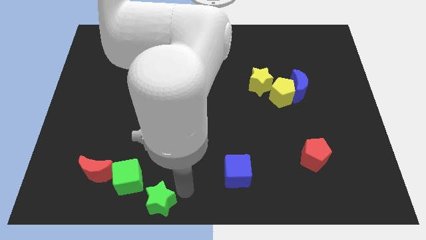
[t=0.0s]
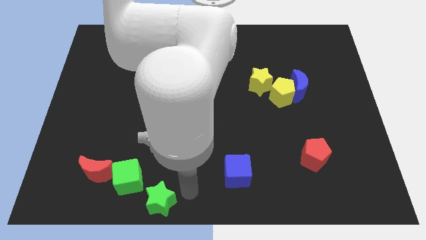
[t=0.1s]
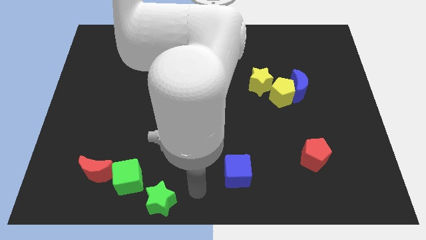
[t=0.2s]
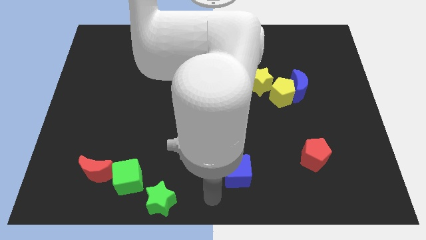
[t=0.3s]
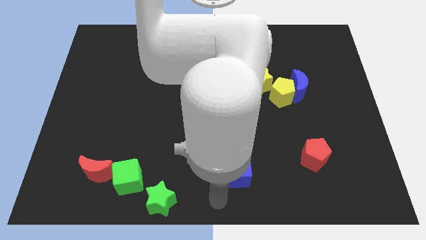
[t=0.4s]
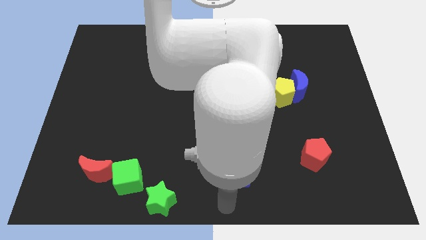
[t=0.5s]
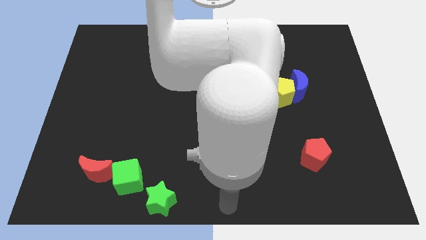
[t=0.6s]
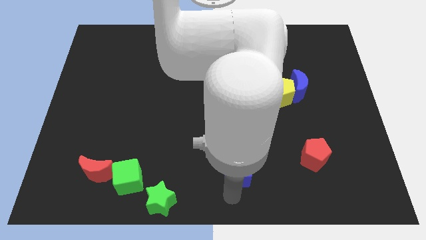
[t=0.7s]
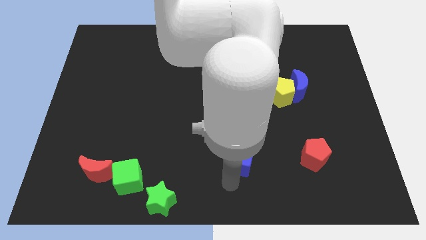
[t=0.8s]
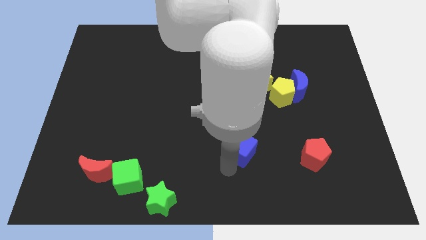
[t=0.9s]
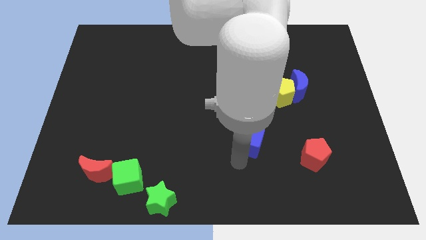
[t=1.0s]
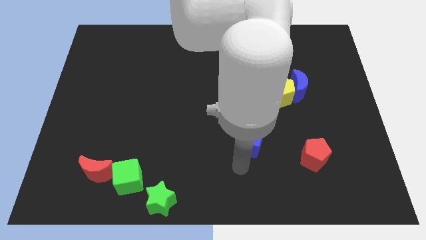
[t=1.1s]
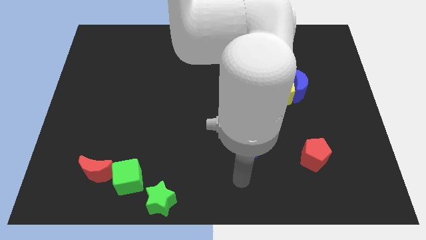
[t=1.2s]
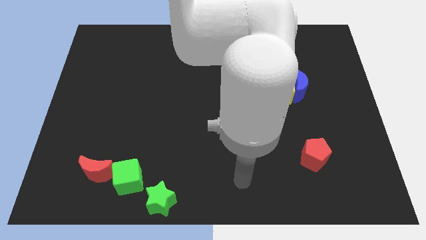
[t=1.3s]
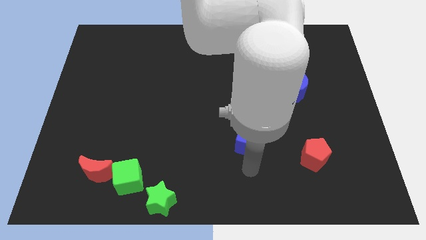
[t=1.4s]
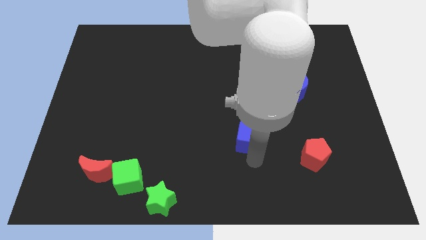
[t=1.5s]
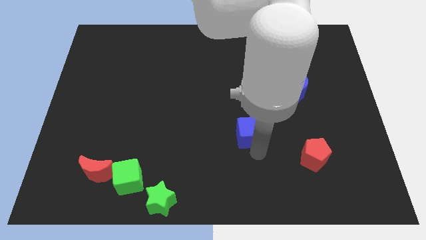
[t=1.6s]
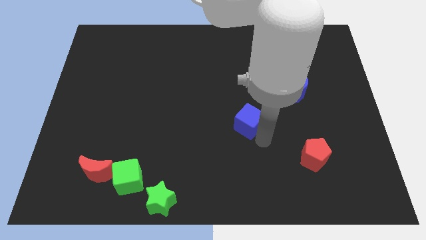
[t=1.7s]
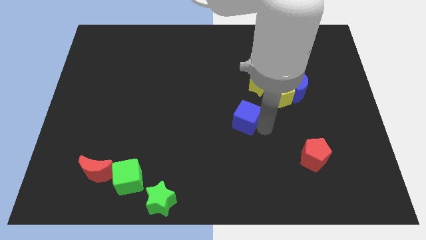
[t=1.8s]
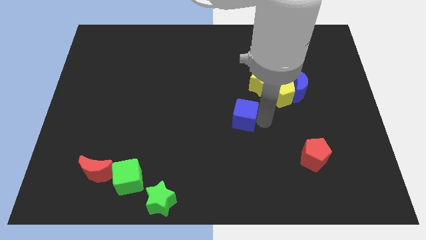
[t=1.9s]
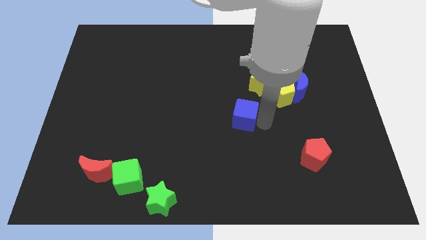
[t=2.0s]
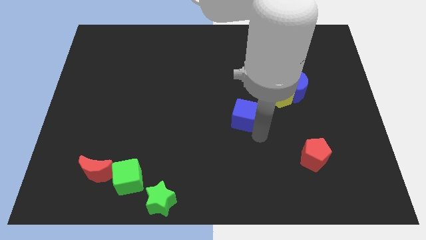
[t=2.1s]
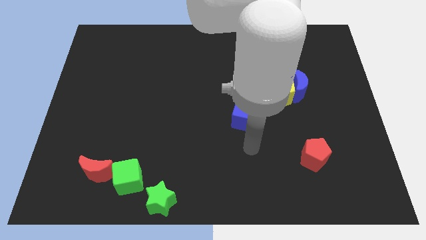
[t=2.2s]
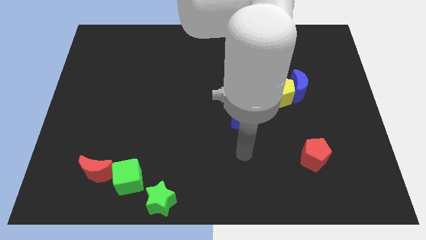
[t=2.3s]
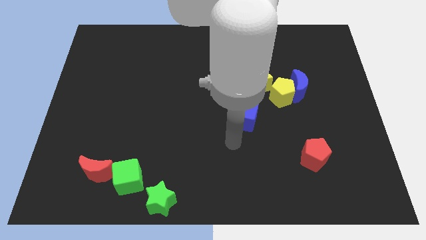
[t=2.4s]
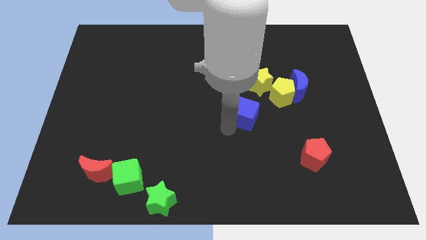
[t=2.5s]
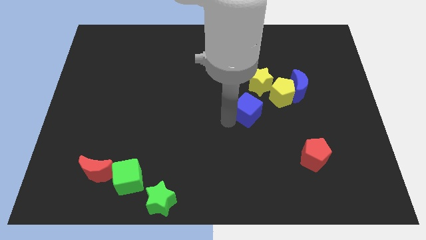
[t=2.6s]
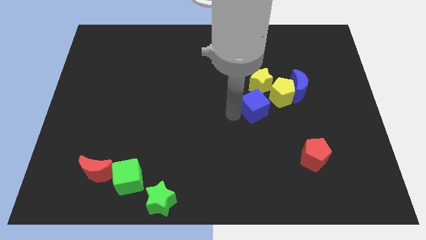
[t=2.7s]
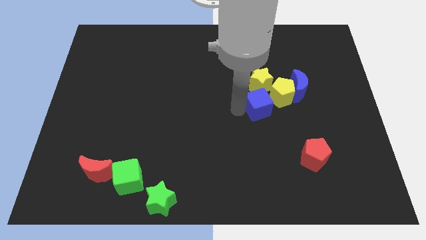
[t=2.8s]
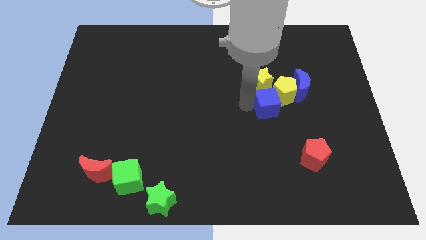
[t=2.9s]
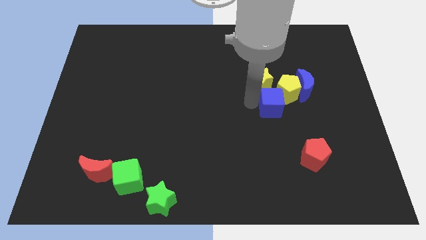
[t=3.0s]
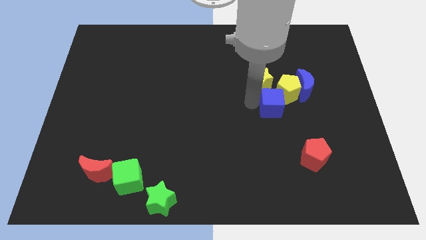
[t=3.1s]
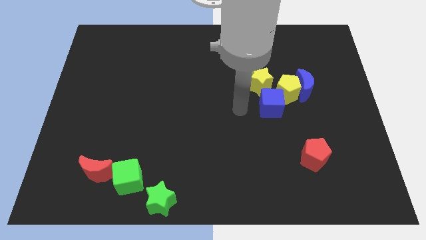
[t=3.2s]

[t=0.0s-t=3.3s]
push the blue cube into the group of blocks

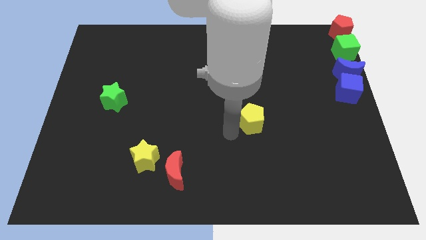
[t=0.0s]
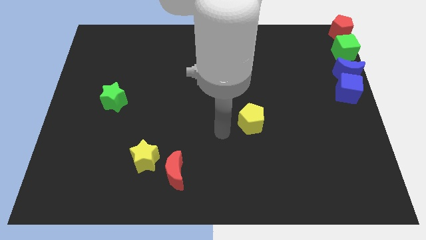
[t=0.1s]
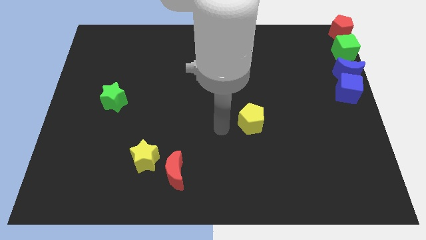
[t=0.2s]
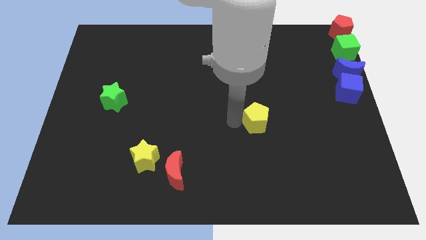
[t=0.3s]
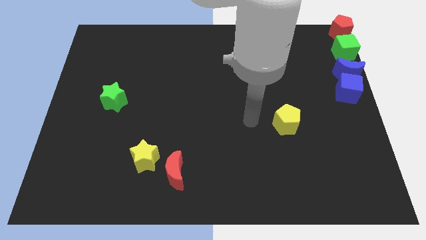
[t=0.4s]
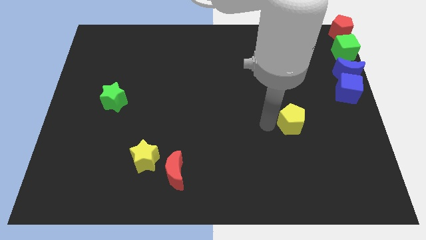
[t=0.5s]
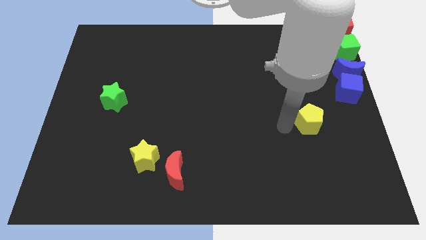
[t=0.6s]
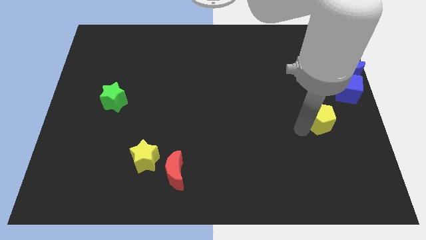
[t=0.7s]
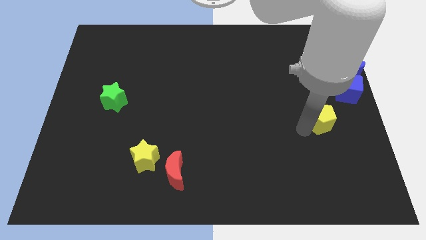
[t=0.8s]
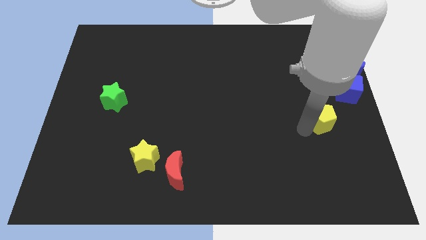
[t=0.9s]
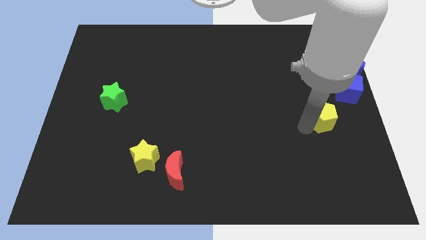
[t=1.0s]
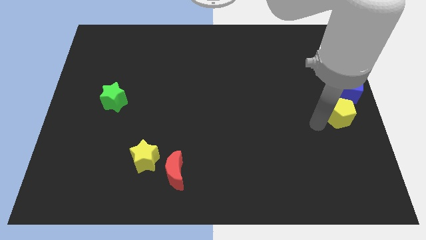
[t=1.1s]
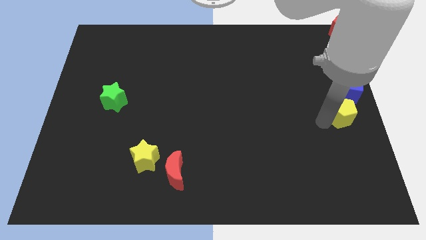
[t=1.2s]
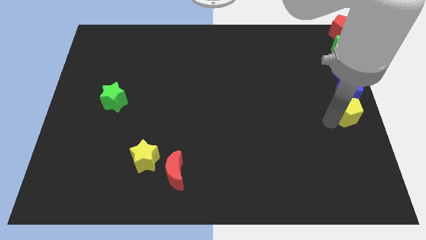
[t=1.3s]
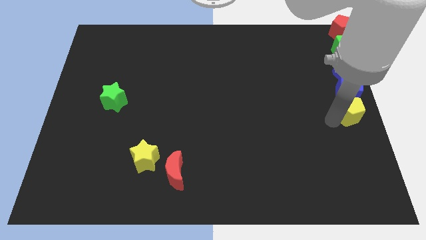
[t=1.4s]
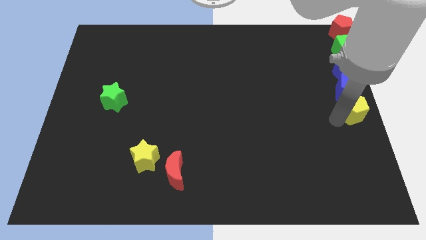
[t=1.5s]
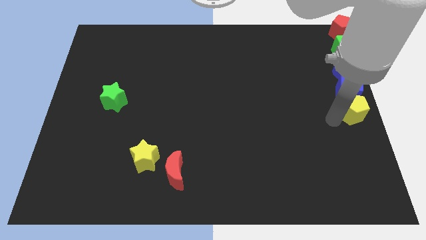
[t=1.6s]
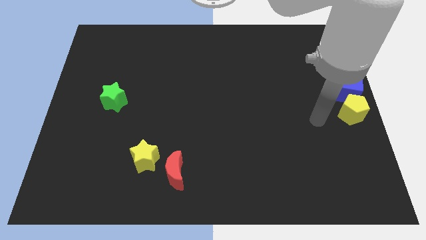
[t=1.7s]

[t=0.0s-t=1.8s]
place the yellow pentagon at the center right side of the board

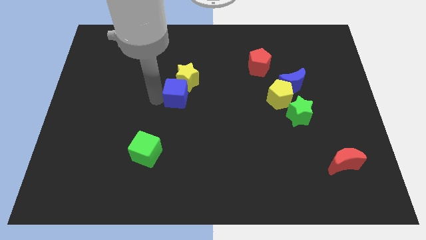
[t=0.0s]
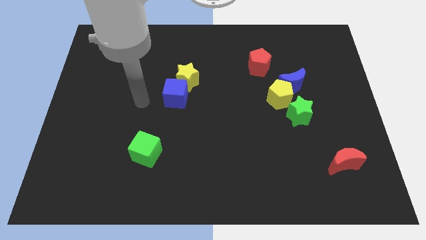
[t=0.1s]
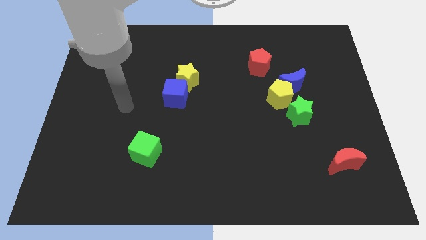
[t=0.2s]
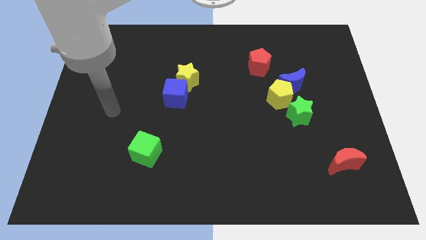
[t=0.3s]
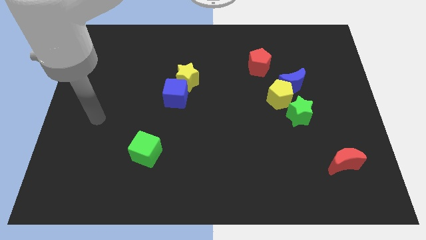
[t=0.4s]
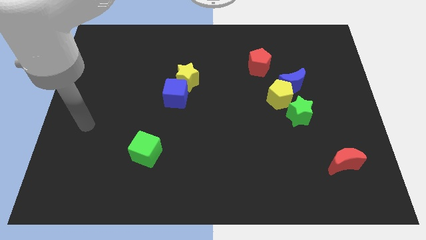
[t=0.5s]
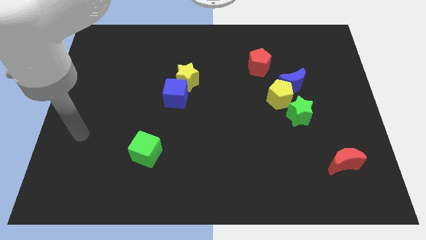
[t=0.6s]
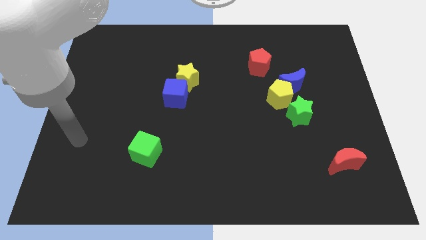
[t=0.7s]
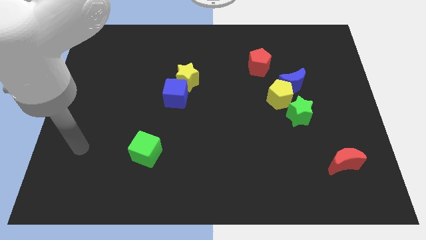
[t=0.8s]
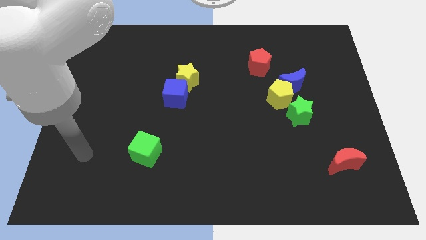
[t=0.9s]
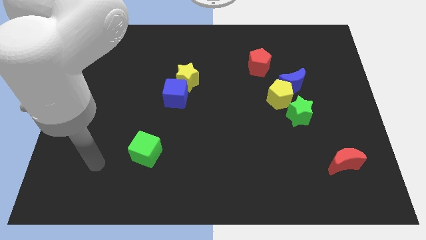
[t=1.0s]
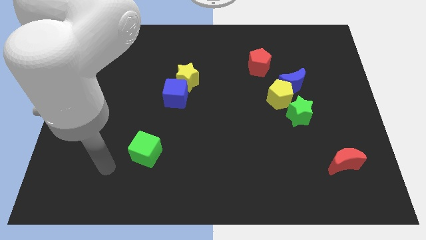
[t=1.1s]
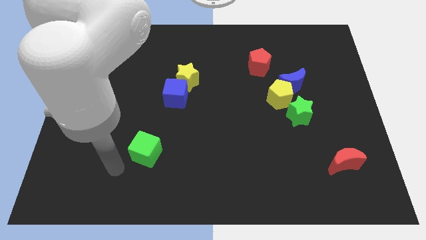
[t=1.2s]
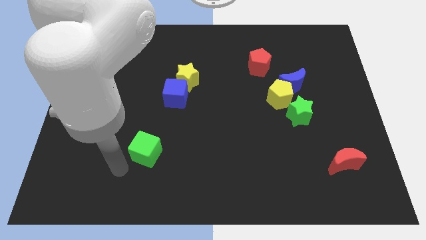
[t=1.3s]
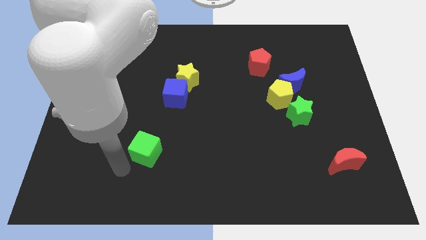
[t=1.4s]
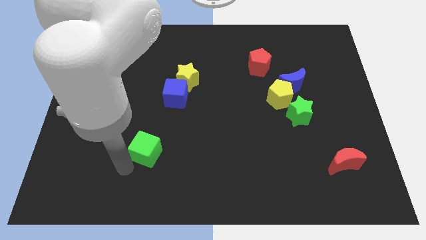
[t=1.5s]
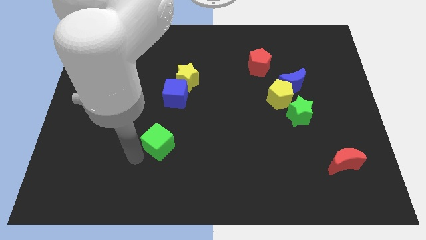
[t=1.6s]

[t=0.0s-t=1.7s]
place your arm to the bottom of green cube

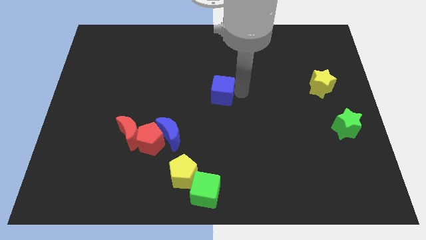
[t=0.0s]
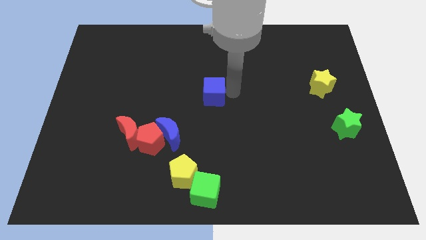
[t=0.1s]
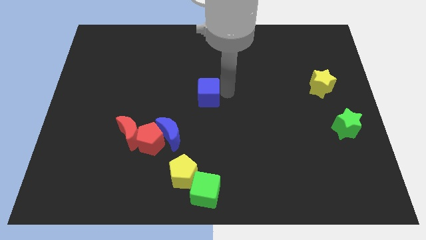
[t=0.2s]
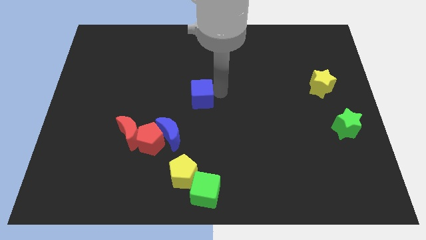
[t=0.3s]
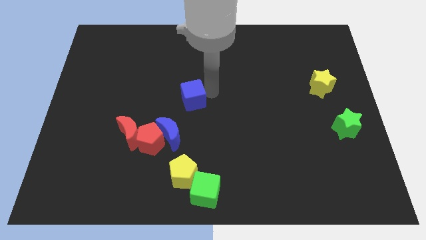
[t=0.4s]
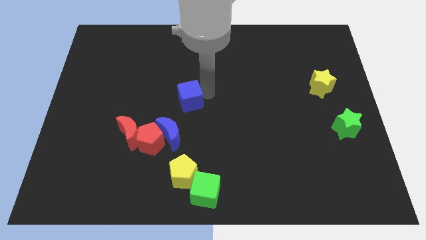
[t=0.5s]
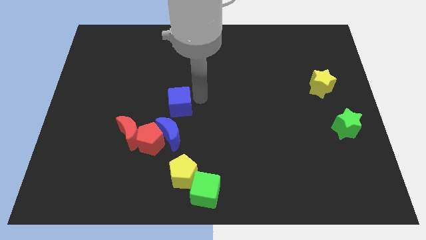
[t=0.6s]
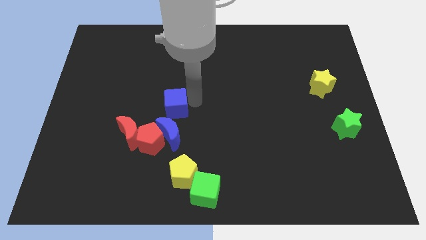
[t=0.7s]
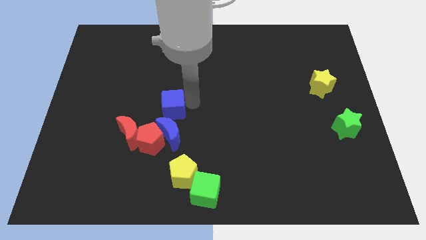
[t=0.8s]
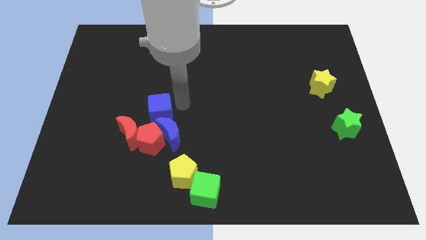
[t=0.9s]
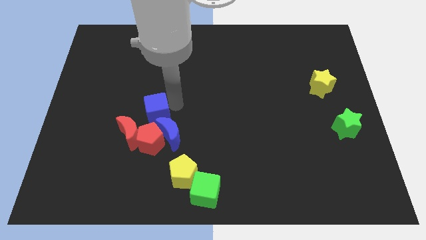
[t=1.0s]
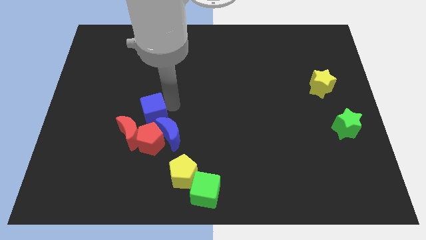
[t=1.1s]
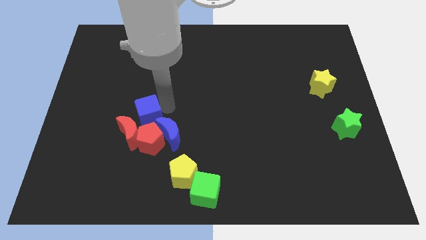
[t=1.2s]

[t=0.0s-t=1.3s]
place the blue cube above the blue crescent

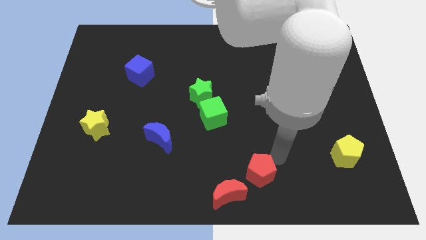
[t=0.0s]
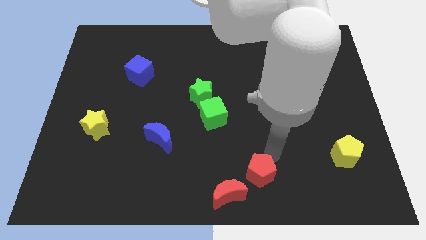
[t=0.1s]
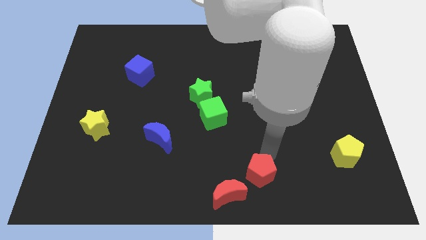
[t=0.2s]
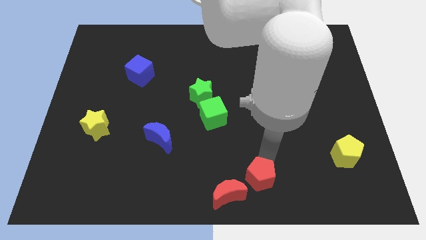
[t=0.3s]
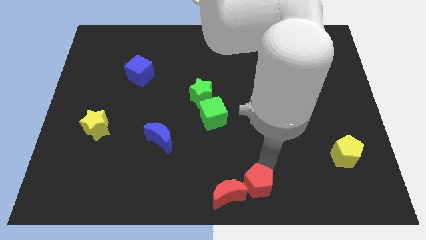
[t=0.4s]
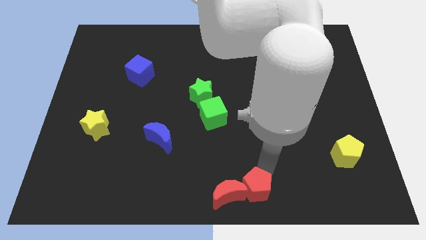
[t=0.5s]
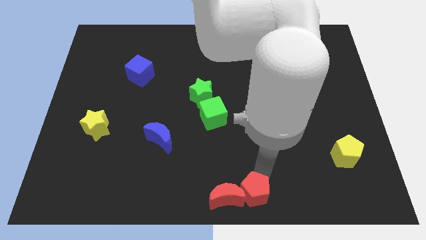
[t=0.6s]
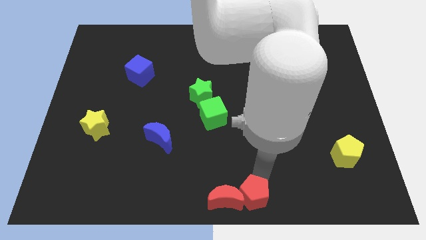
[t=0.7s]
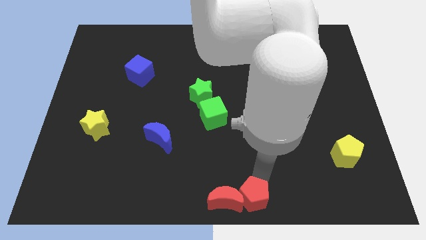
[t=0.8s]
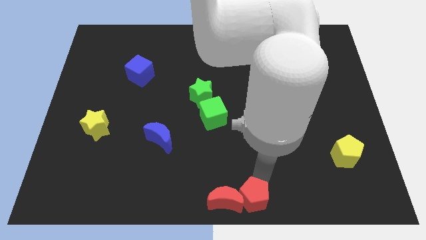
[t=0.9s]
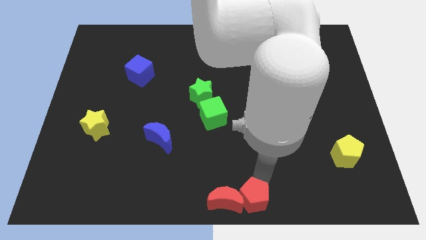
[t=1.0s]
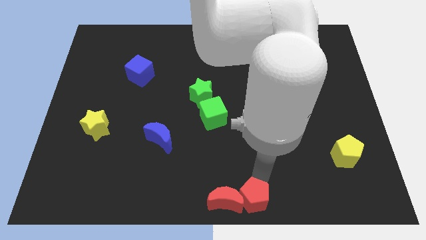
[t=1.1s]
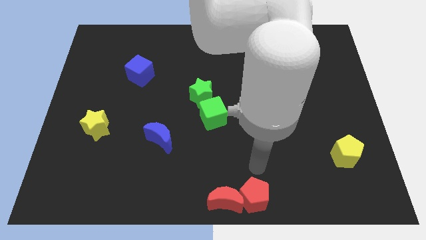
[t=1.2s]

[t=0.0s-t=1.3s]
move the red pentagon towards the right side of the red crescent
